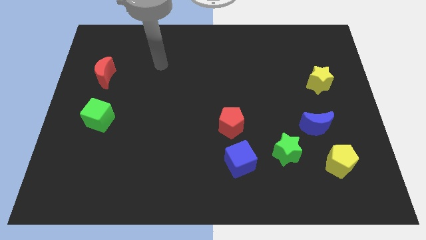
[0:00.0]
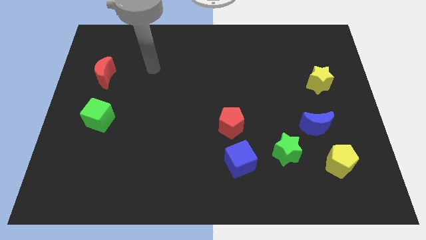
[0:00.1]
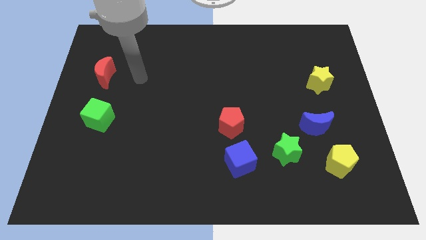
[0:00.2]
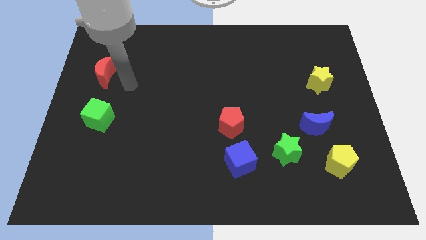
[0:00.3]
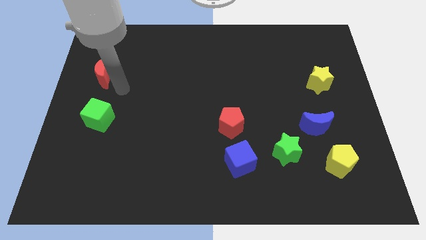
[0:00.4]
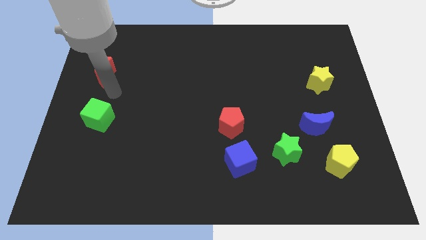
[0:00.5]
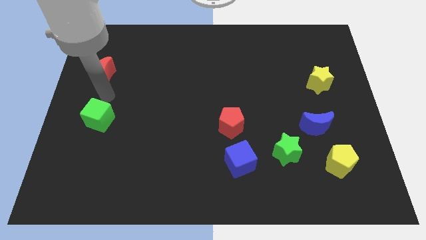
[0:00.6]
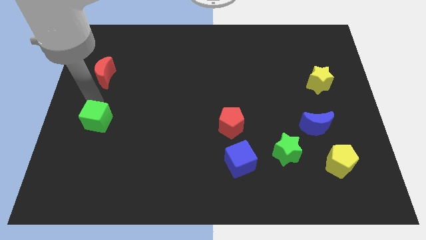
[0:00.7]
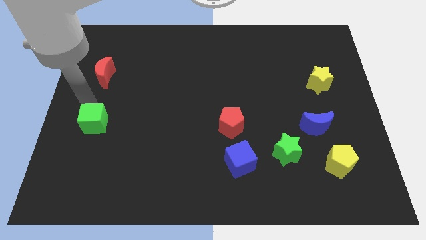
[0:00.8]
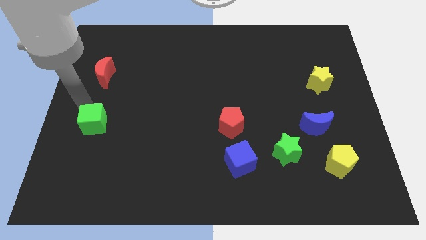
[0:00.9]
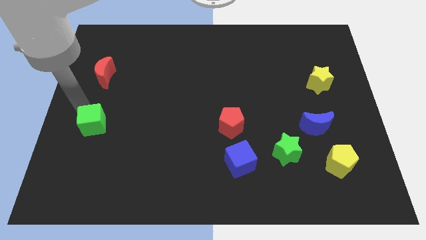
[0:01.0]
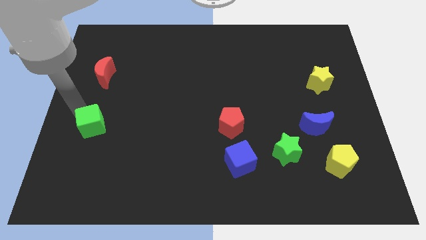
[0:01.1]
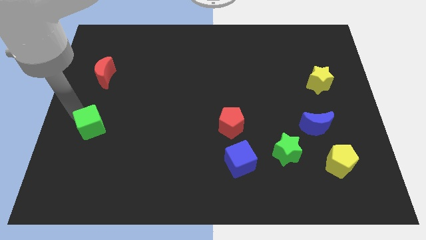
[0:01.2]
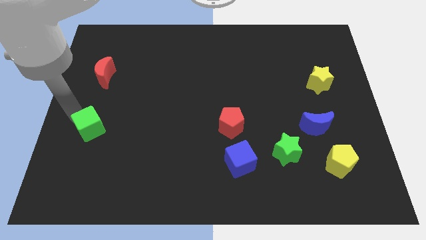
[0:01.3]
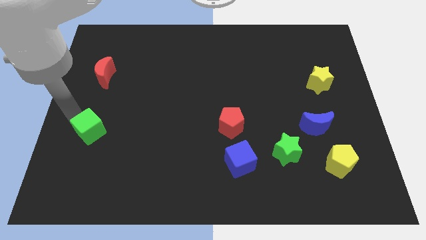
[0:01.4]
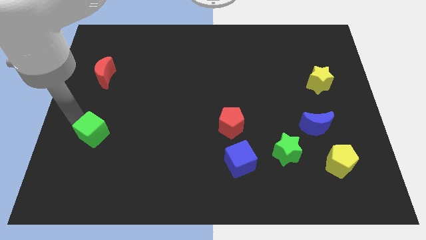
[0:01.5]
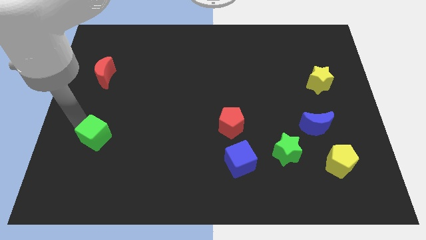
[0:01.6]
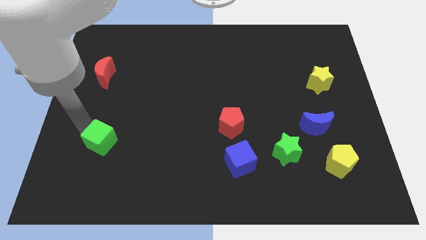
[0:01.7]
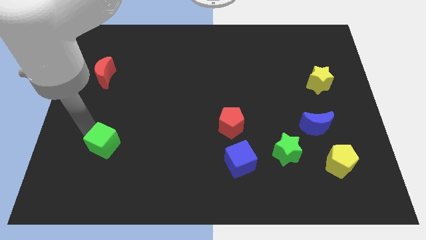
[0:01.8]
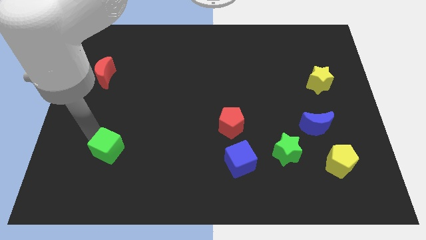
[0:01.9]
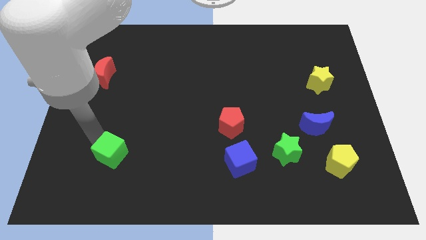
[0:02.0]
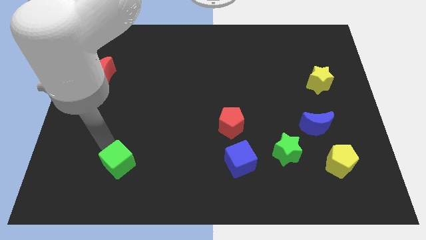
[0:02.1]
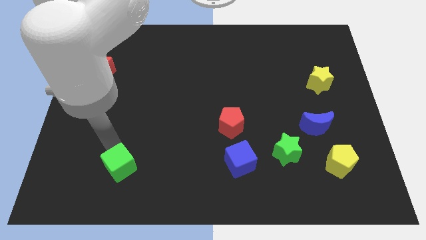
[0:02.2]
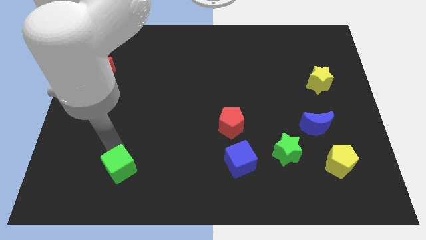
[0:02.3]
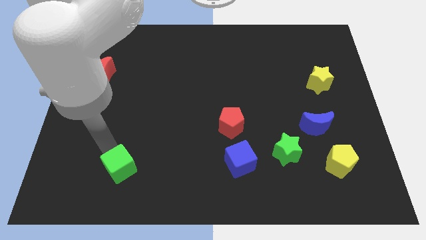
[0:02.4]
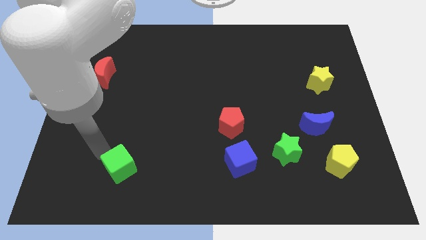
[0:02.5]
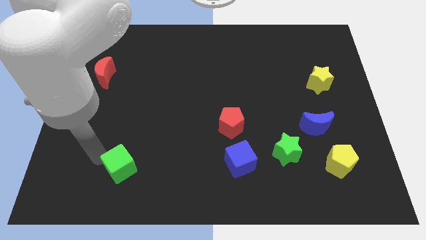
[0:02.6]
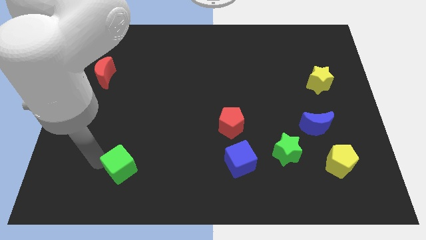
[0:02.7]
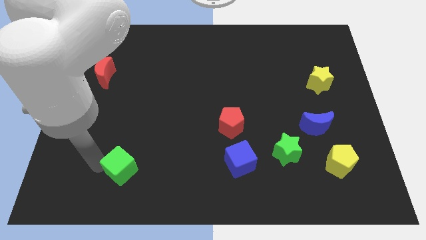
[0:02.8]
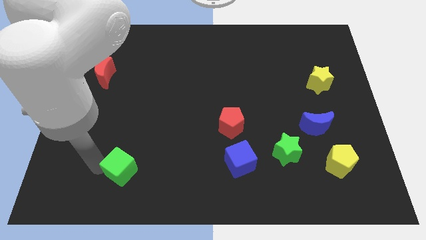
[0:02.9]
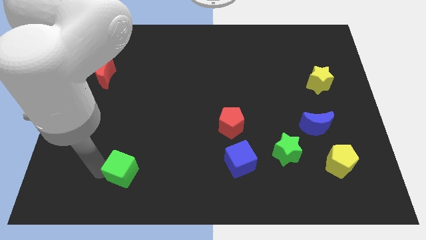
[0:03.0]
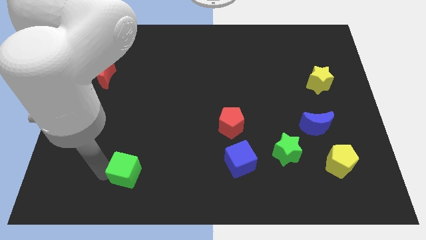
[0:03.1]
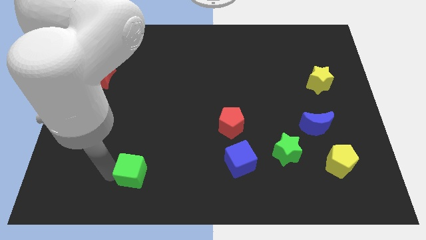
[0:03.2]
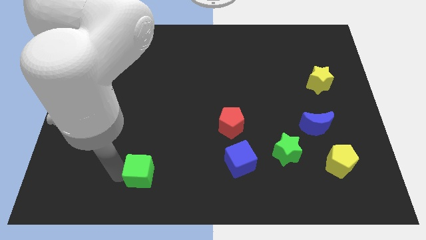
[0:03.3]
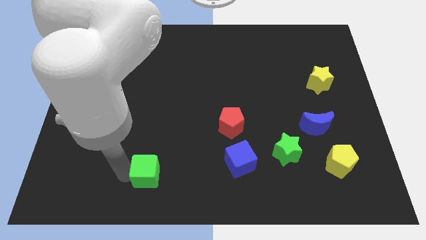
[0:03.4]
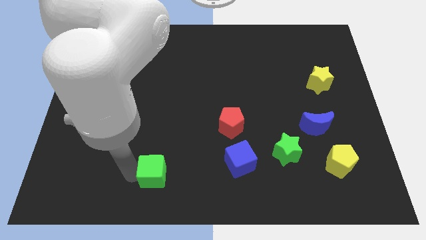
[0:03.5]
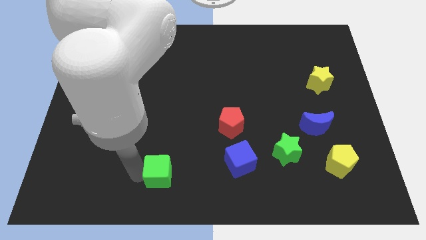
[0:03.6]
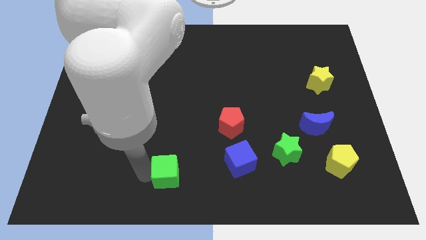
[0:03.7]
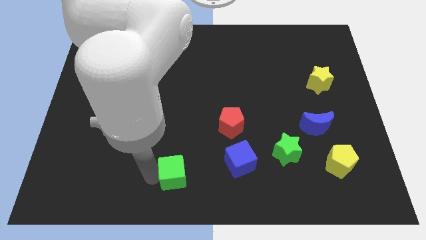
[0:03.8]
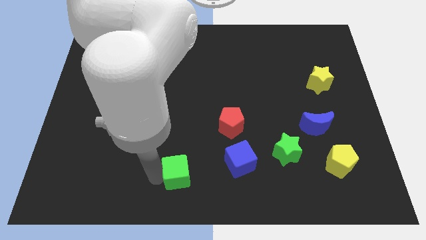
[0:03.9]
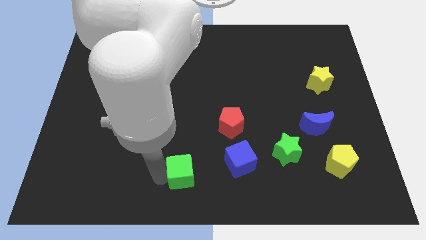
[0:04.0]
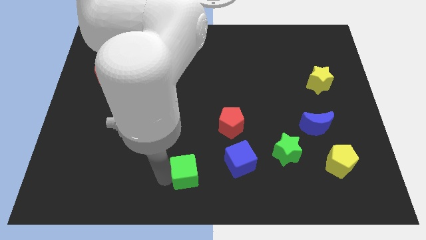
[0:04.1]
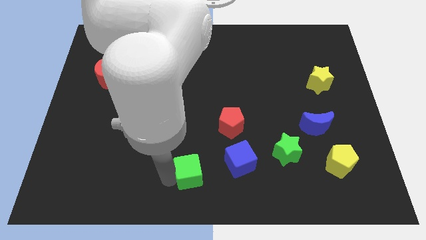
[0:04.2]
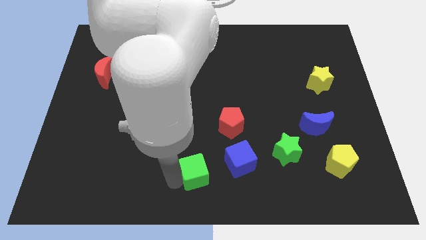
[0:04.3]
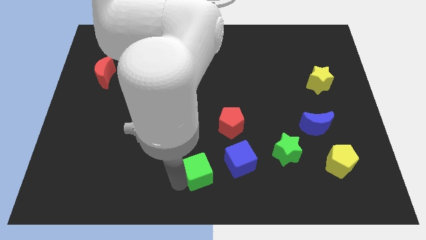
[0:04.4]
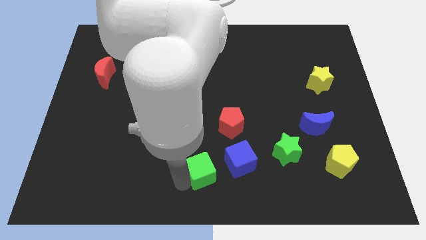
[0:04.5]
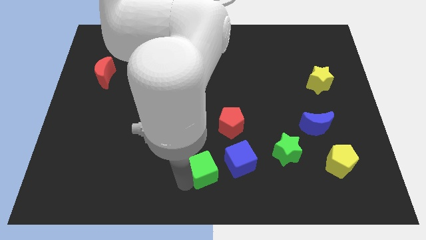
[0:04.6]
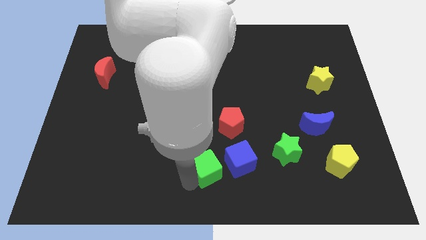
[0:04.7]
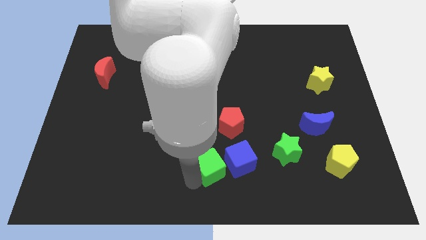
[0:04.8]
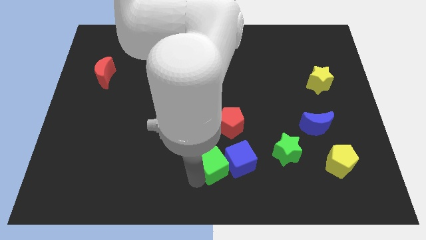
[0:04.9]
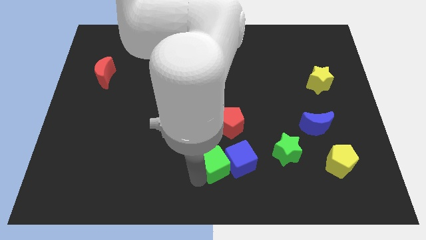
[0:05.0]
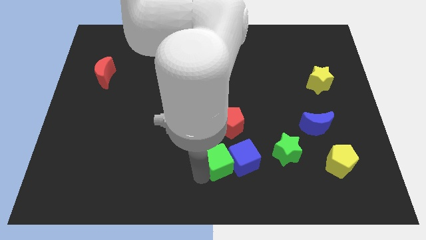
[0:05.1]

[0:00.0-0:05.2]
slide the green cube towards the blue cube

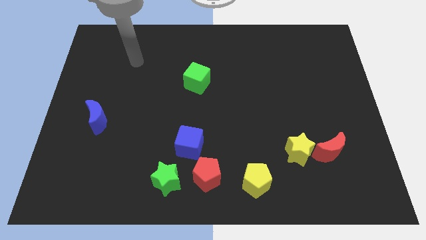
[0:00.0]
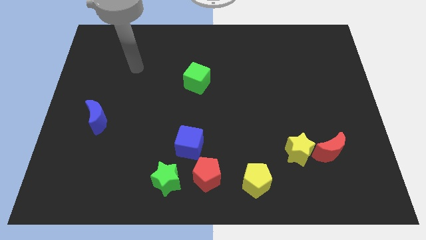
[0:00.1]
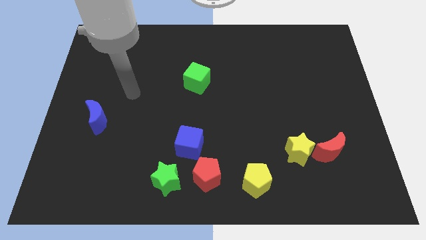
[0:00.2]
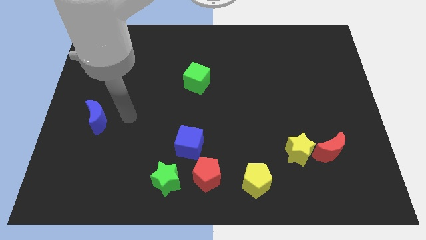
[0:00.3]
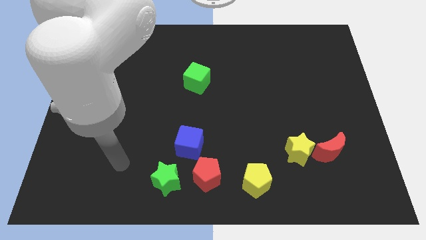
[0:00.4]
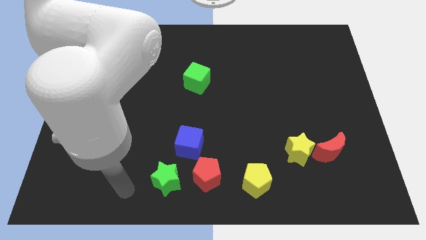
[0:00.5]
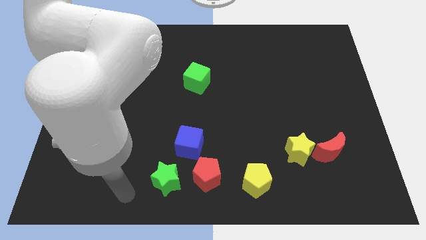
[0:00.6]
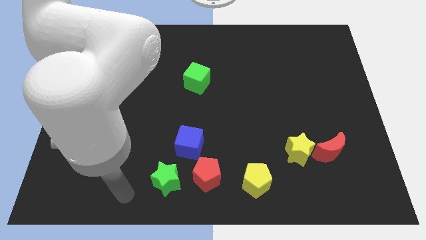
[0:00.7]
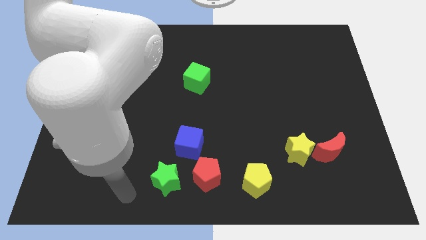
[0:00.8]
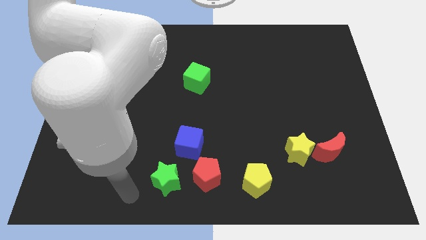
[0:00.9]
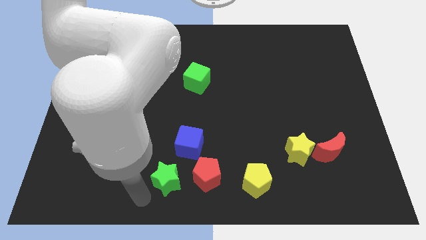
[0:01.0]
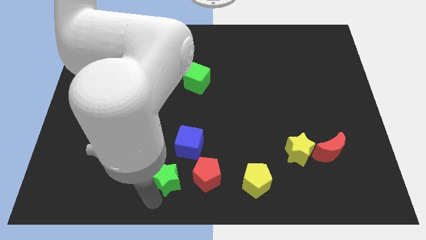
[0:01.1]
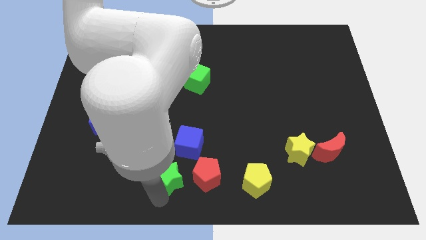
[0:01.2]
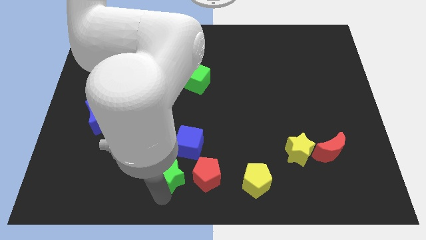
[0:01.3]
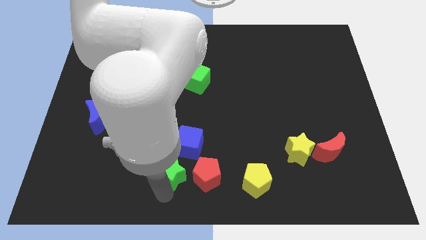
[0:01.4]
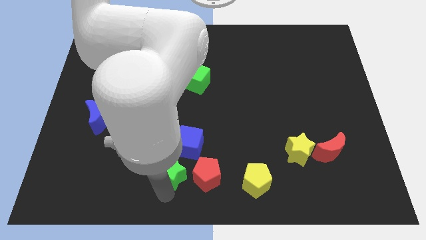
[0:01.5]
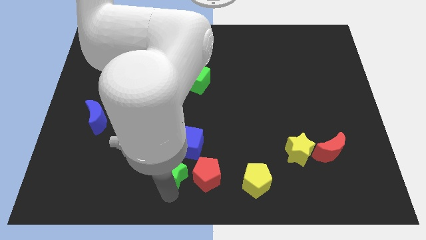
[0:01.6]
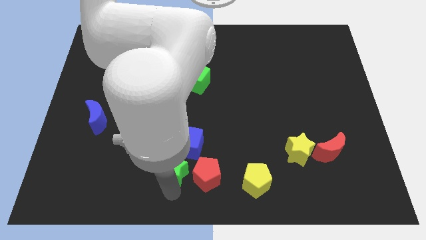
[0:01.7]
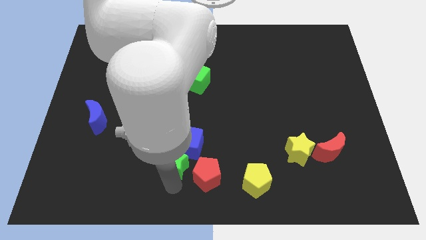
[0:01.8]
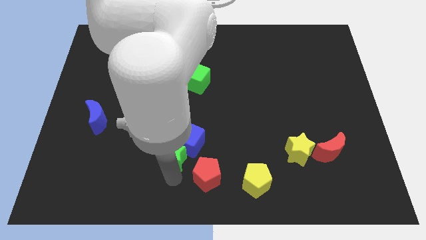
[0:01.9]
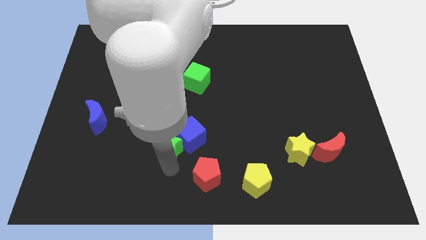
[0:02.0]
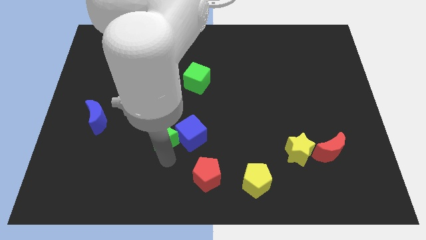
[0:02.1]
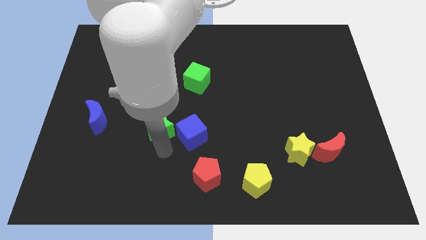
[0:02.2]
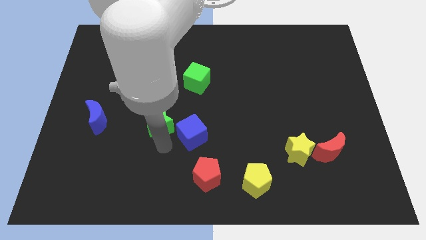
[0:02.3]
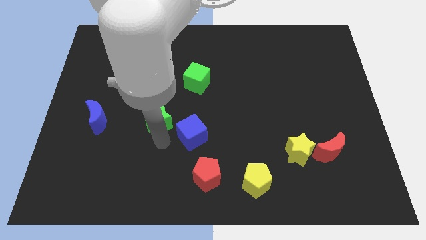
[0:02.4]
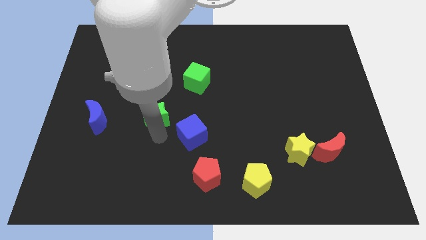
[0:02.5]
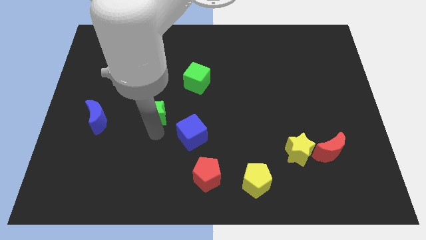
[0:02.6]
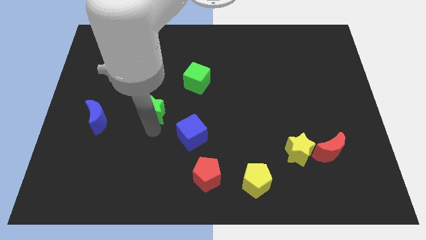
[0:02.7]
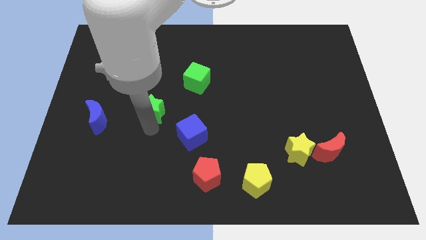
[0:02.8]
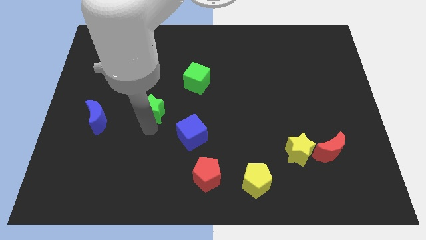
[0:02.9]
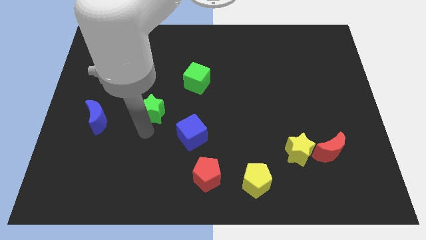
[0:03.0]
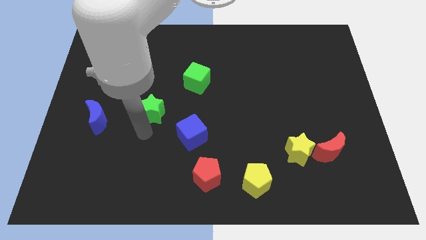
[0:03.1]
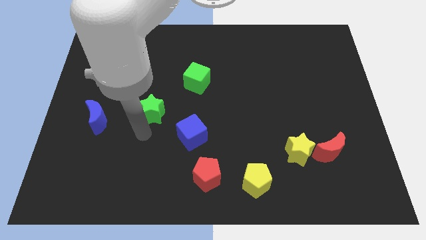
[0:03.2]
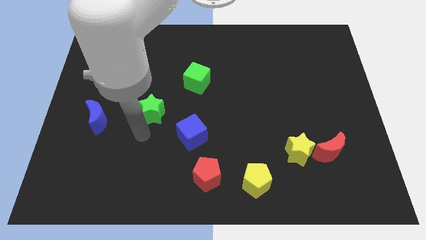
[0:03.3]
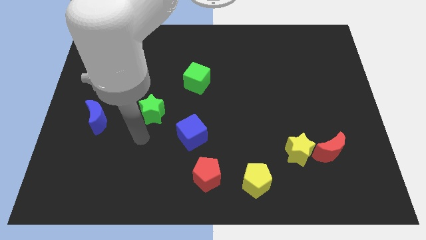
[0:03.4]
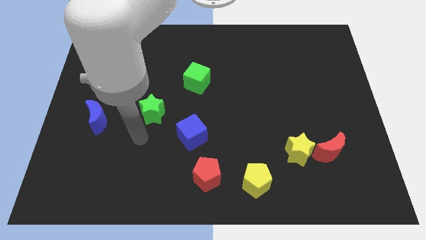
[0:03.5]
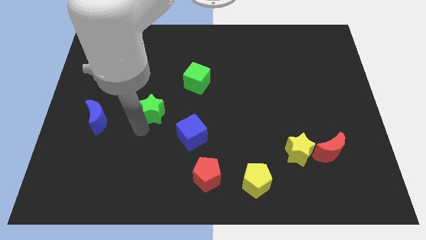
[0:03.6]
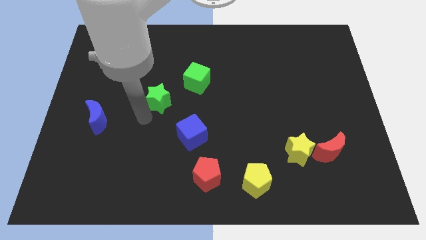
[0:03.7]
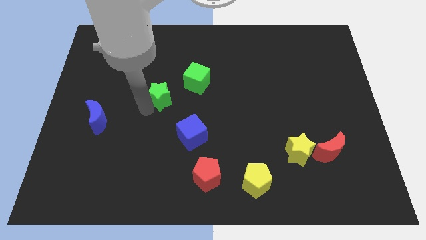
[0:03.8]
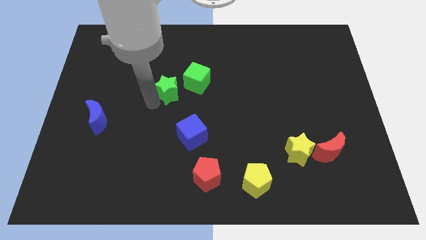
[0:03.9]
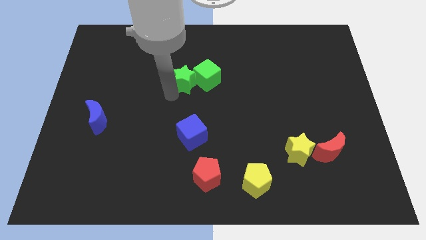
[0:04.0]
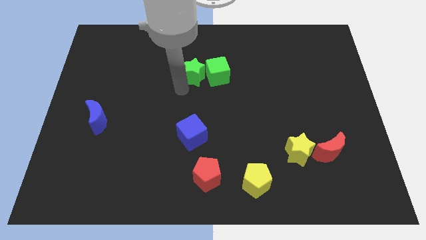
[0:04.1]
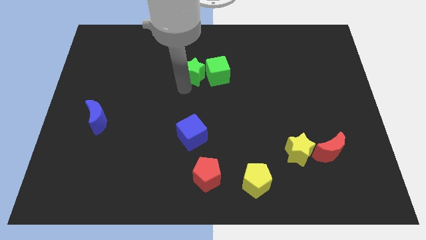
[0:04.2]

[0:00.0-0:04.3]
slide the green star to the green cube
